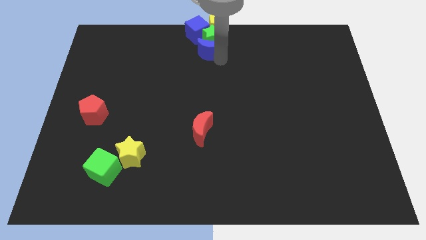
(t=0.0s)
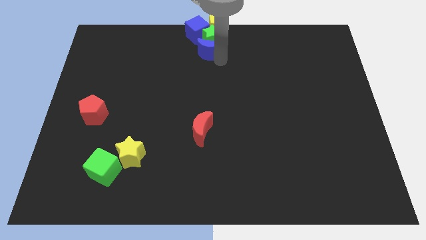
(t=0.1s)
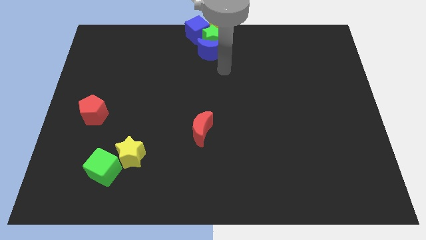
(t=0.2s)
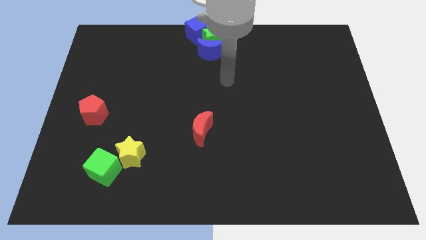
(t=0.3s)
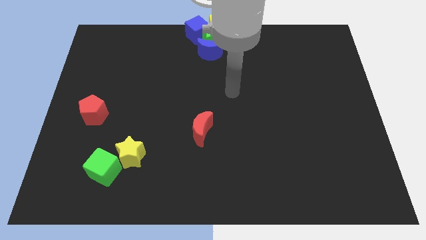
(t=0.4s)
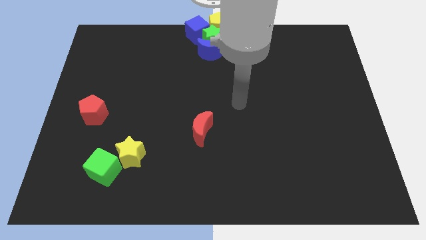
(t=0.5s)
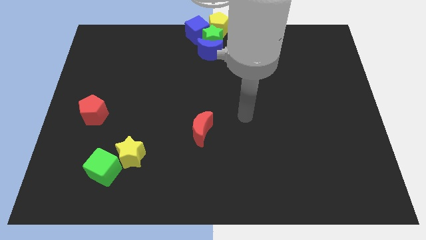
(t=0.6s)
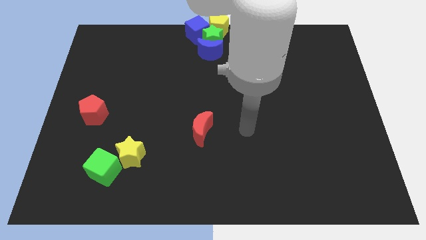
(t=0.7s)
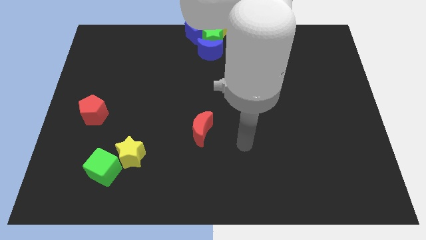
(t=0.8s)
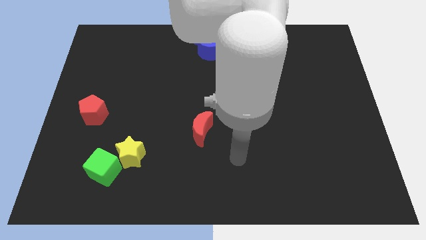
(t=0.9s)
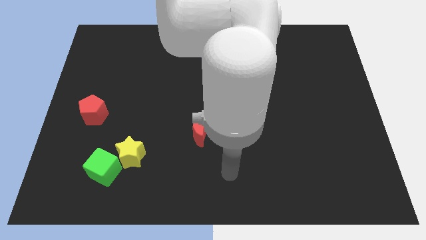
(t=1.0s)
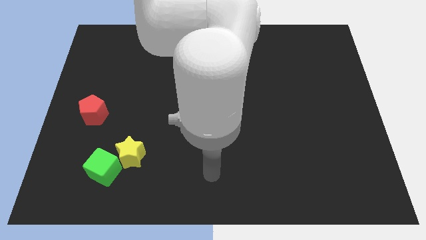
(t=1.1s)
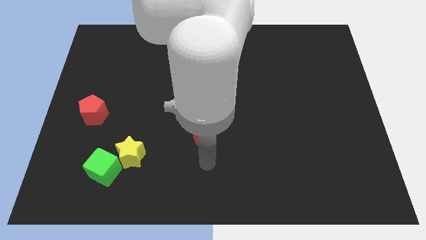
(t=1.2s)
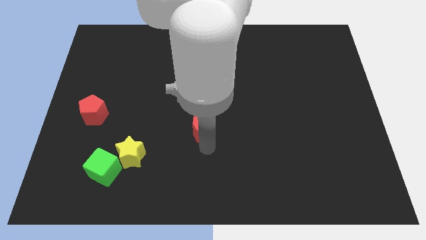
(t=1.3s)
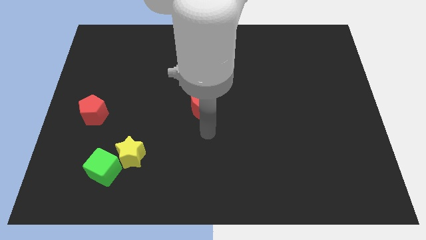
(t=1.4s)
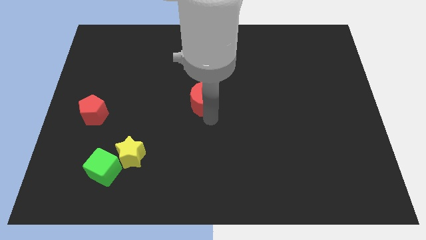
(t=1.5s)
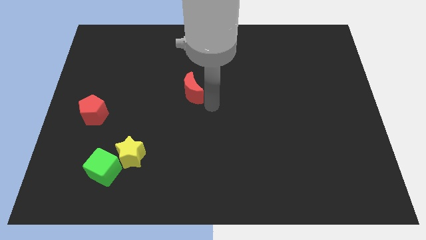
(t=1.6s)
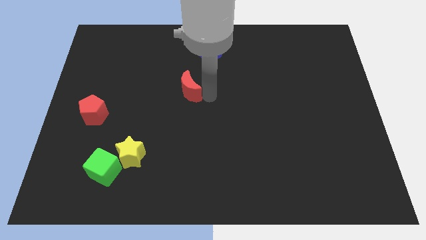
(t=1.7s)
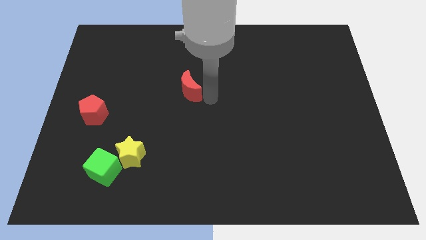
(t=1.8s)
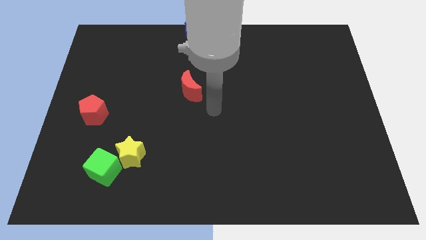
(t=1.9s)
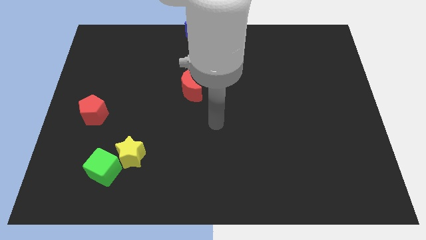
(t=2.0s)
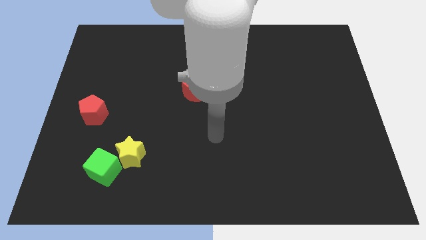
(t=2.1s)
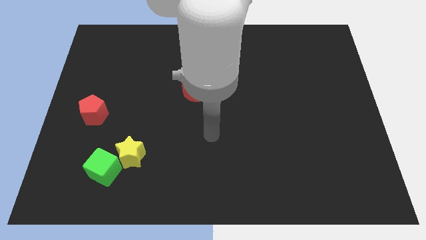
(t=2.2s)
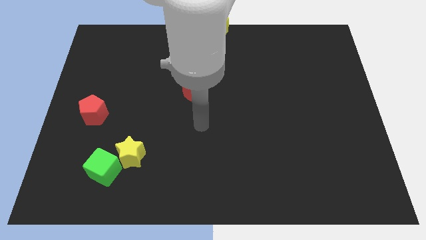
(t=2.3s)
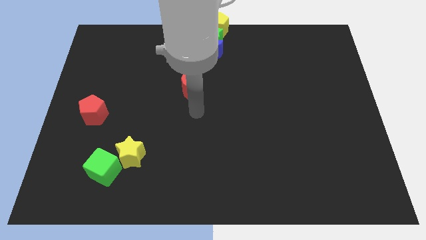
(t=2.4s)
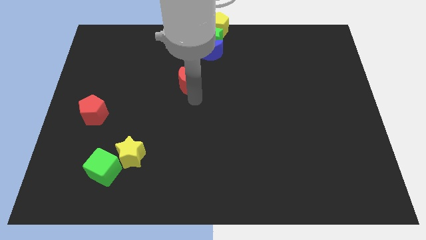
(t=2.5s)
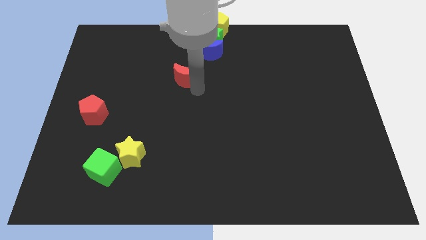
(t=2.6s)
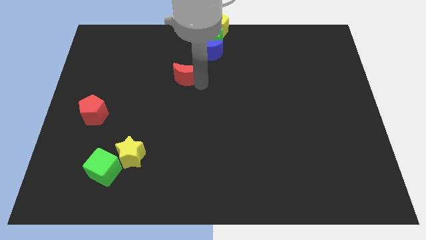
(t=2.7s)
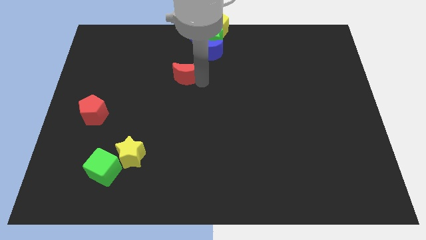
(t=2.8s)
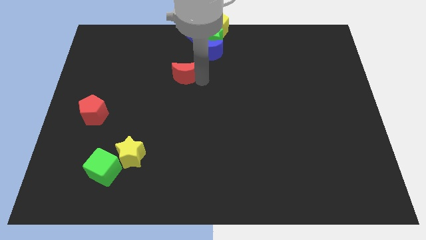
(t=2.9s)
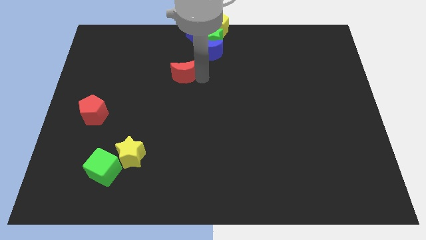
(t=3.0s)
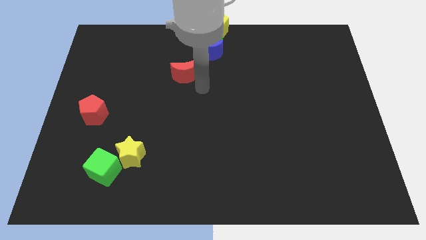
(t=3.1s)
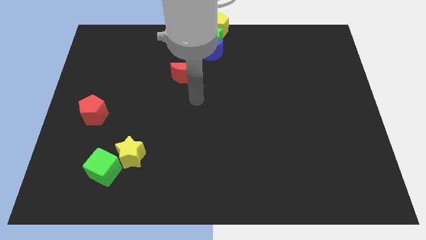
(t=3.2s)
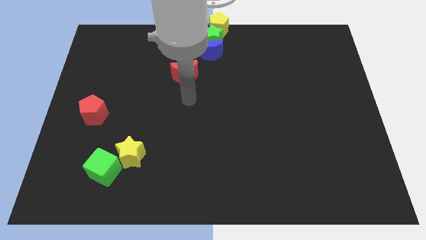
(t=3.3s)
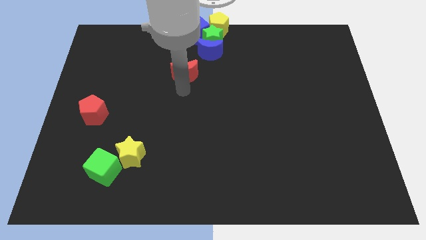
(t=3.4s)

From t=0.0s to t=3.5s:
push the red crescent to the top of the board slightly

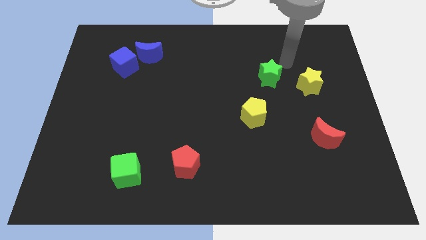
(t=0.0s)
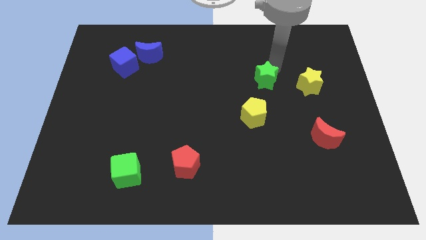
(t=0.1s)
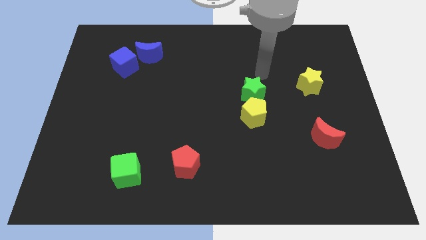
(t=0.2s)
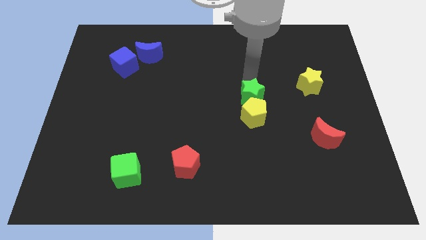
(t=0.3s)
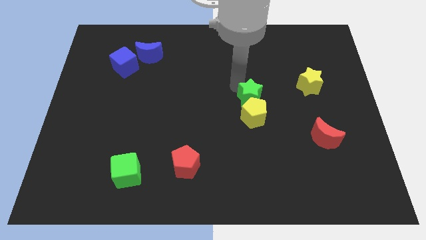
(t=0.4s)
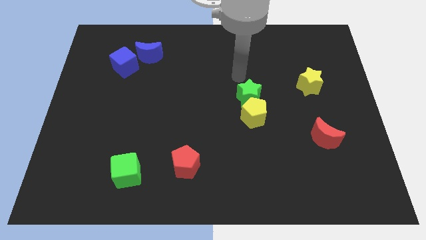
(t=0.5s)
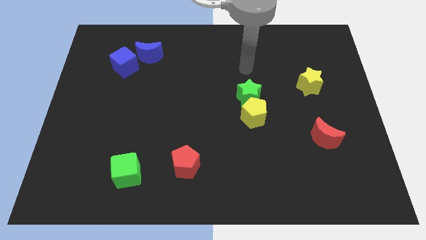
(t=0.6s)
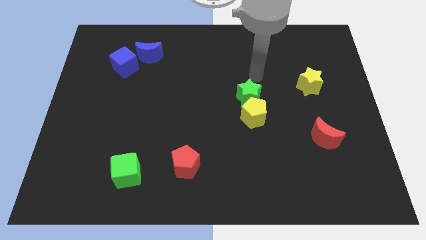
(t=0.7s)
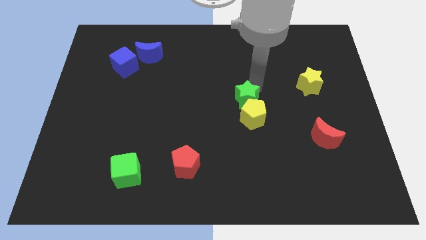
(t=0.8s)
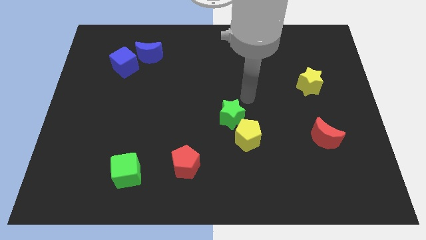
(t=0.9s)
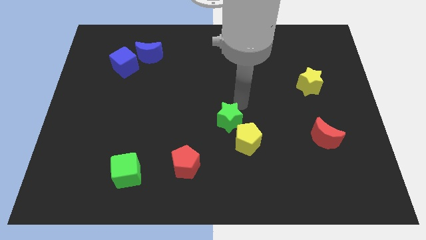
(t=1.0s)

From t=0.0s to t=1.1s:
push green star in to yellow pentagon

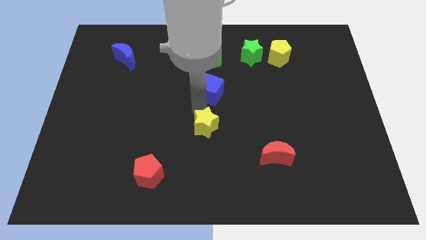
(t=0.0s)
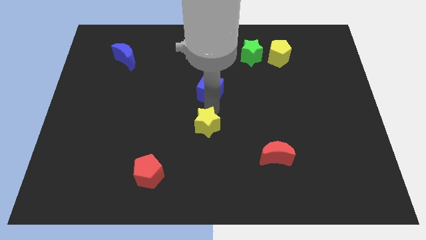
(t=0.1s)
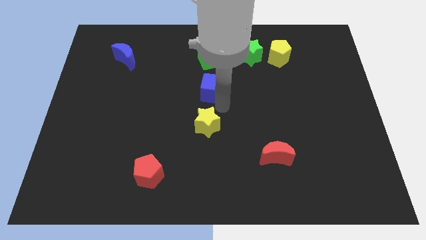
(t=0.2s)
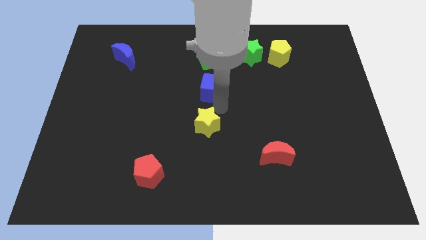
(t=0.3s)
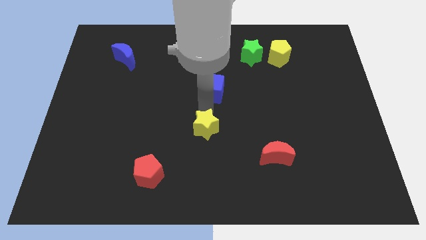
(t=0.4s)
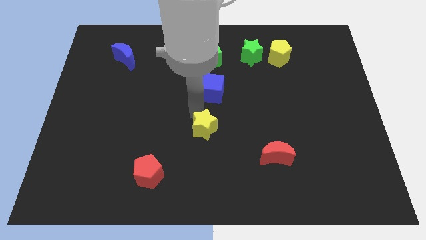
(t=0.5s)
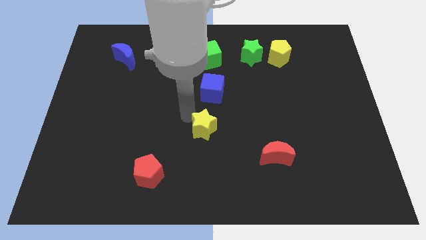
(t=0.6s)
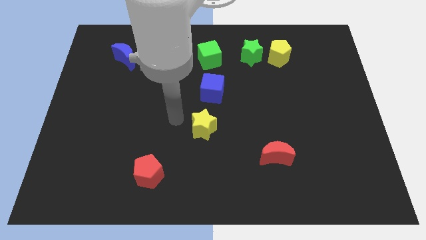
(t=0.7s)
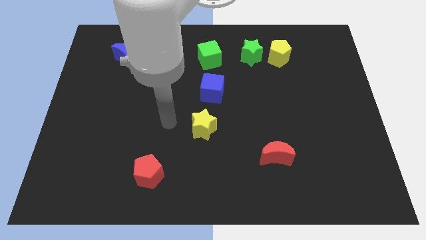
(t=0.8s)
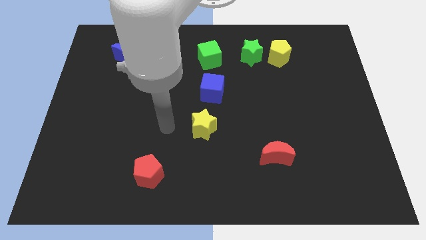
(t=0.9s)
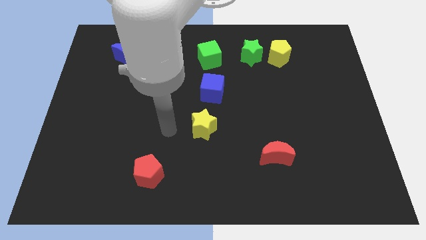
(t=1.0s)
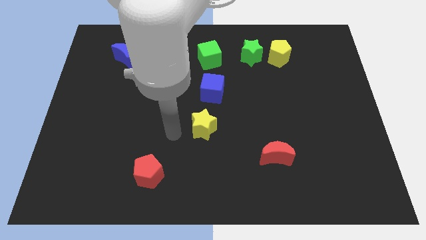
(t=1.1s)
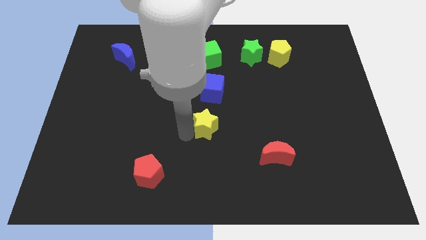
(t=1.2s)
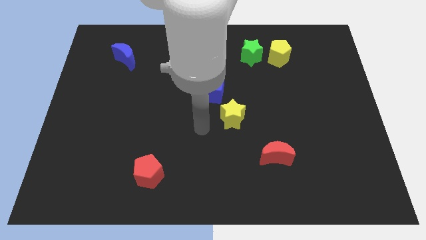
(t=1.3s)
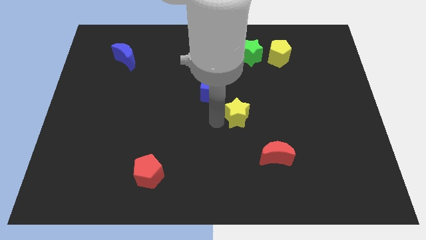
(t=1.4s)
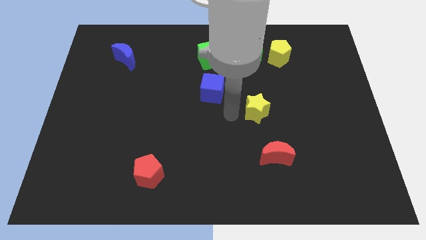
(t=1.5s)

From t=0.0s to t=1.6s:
move yellow star to the right

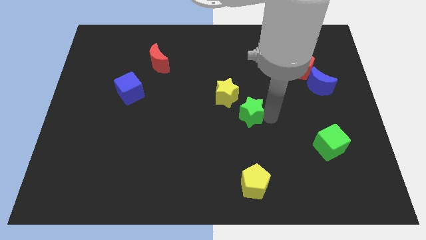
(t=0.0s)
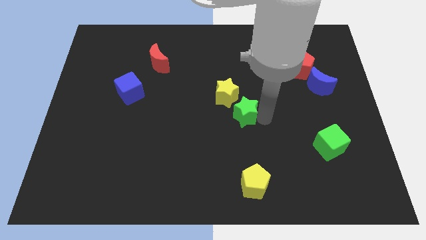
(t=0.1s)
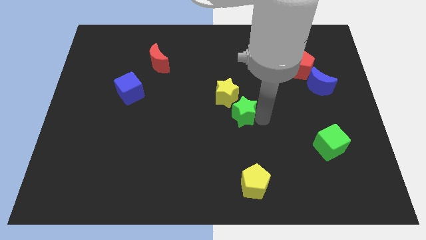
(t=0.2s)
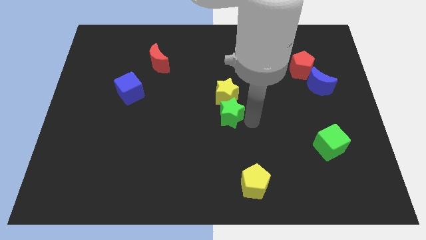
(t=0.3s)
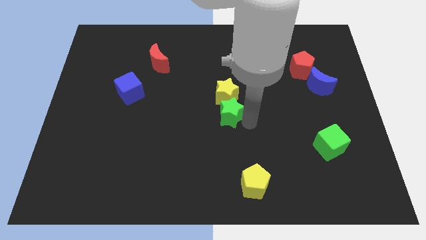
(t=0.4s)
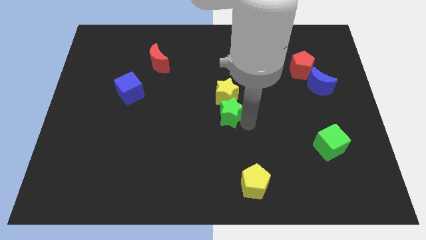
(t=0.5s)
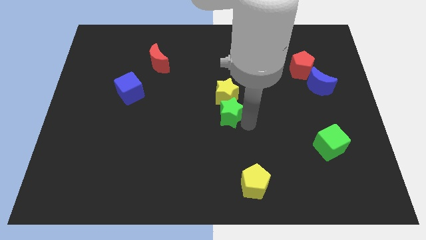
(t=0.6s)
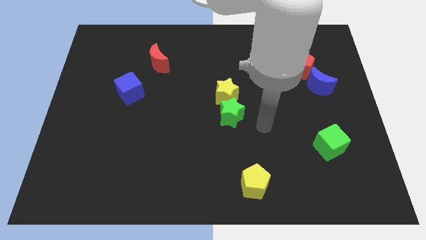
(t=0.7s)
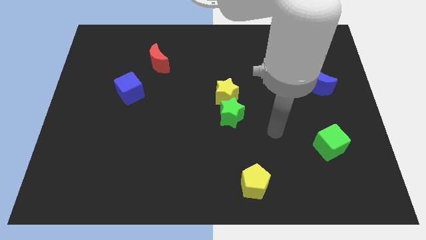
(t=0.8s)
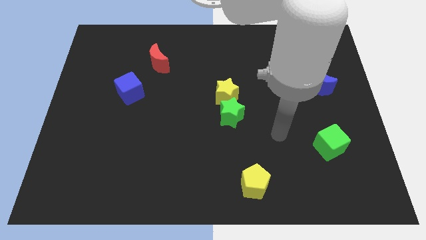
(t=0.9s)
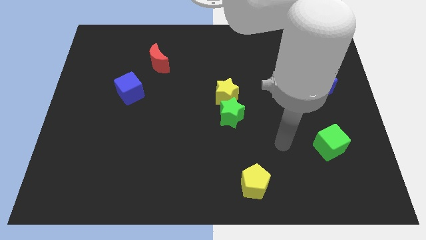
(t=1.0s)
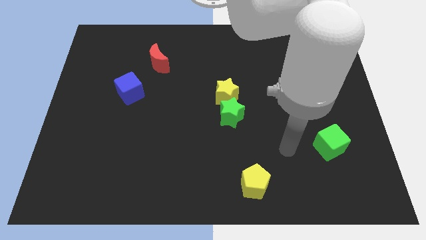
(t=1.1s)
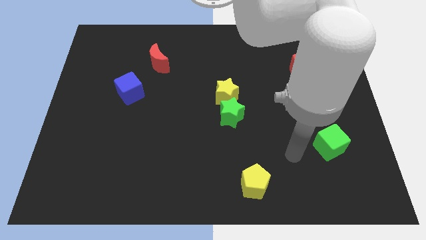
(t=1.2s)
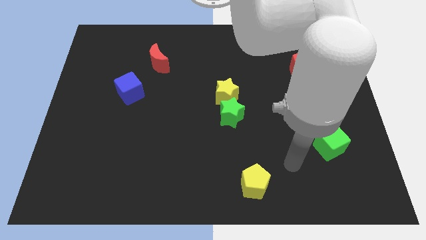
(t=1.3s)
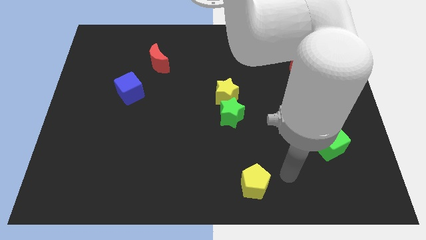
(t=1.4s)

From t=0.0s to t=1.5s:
push the green star into the yellow star

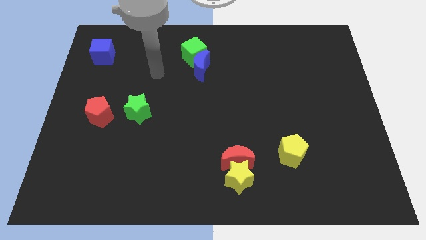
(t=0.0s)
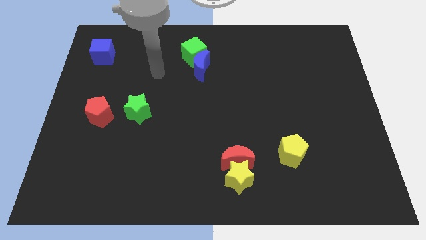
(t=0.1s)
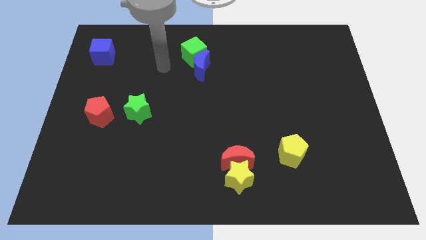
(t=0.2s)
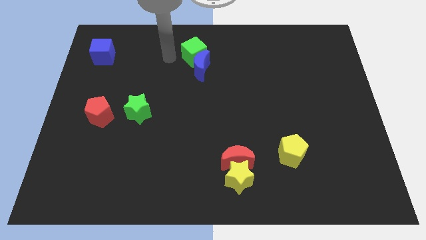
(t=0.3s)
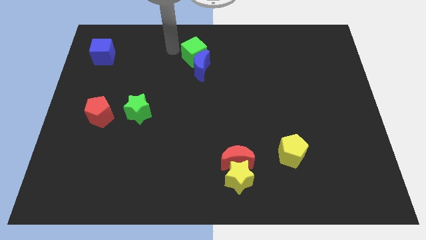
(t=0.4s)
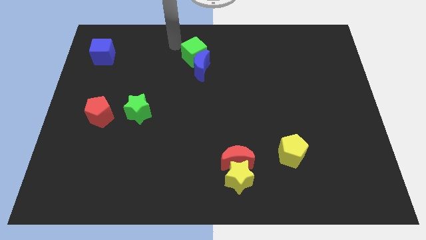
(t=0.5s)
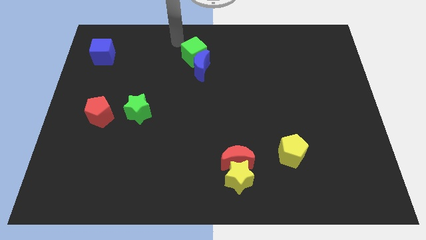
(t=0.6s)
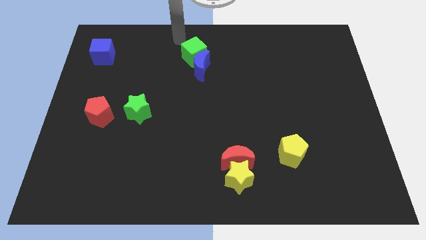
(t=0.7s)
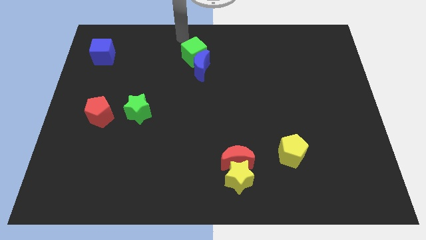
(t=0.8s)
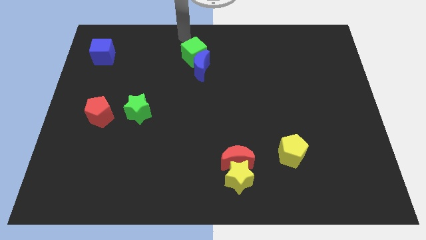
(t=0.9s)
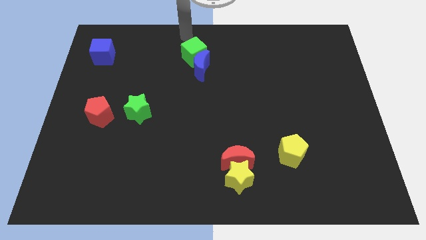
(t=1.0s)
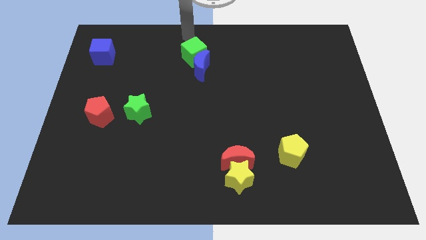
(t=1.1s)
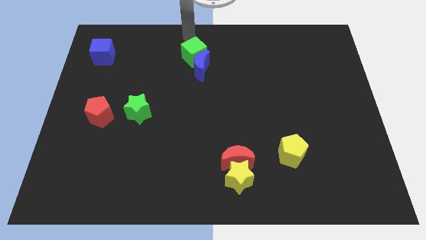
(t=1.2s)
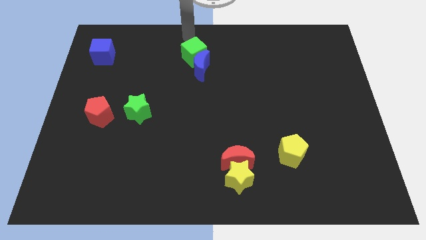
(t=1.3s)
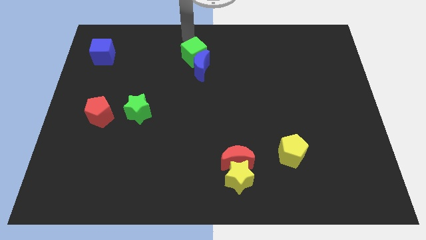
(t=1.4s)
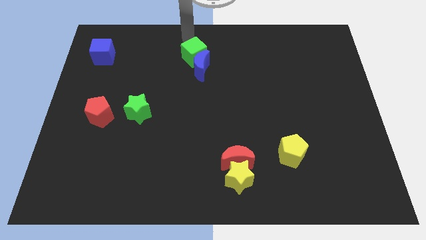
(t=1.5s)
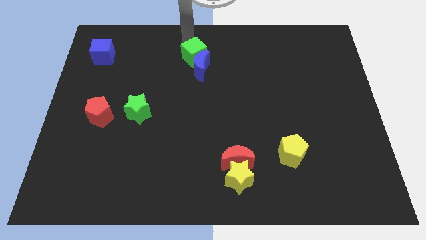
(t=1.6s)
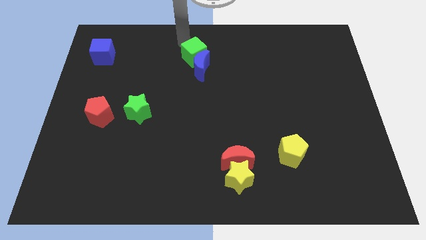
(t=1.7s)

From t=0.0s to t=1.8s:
place the arm at the top of green cube
